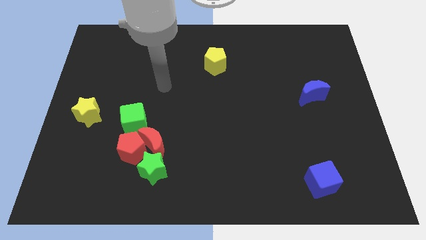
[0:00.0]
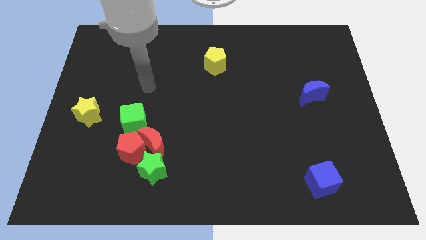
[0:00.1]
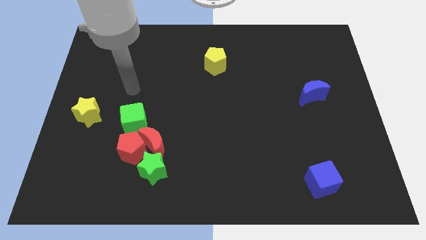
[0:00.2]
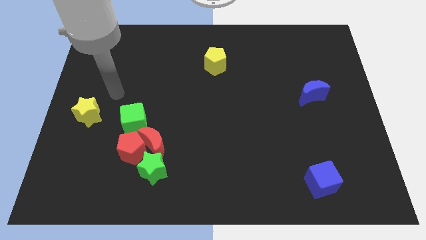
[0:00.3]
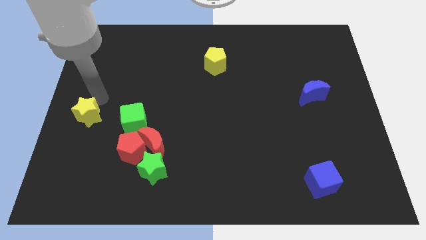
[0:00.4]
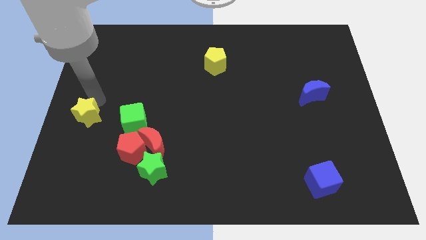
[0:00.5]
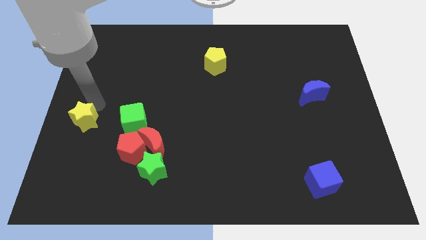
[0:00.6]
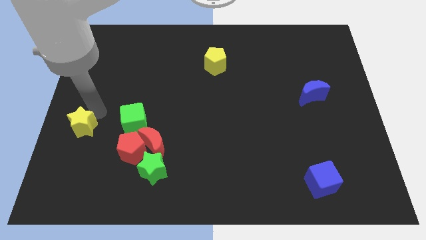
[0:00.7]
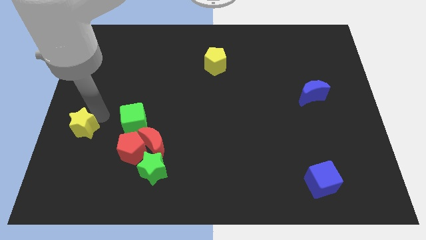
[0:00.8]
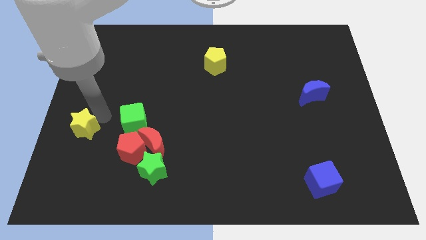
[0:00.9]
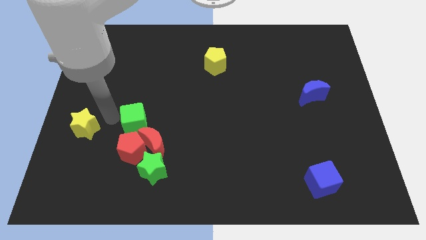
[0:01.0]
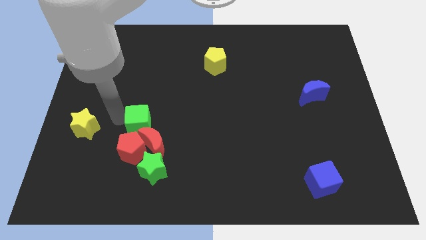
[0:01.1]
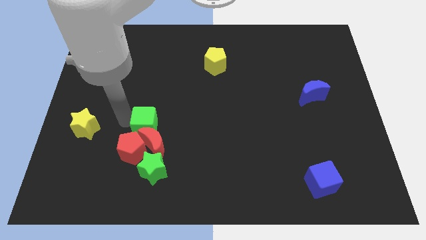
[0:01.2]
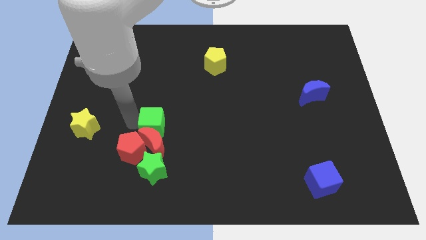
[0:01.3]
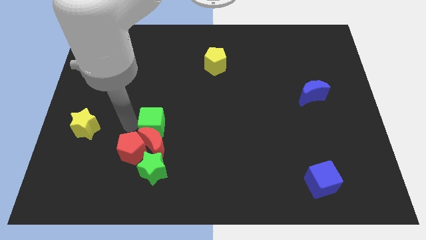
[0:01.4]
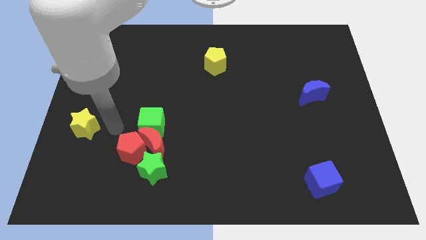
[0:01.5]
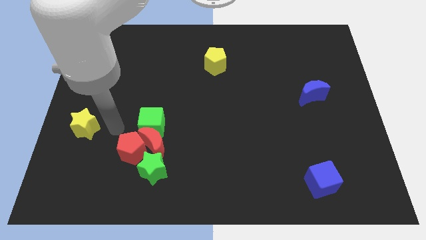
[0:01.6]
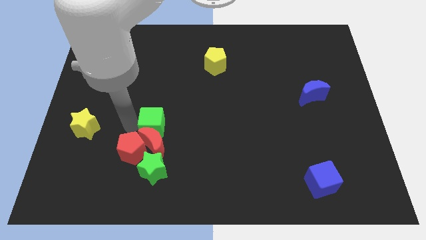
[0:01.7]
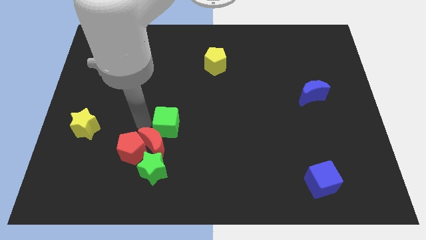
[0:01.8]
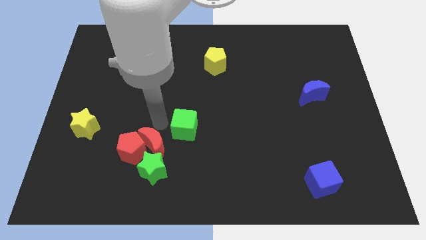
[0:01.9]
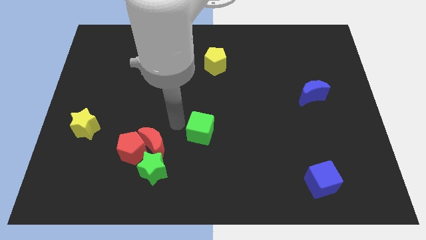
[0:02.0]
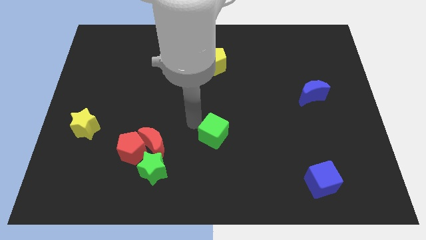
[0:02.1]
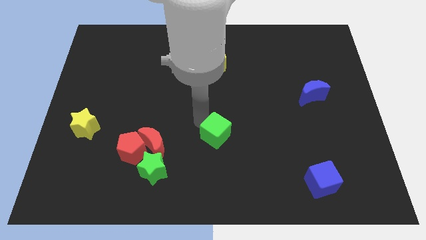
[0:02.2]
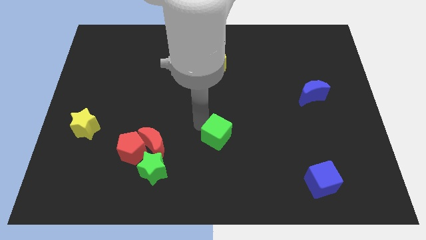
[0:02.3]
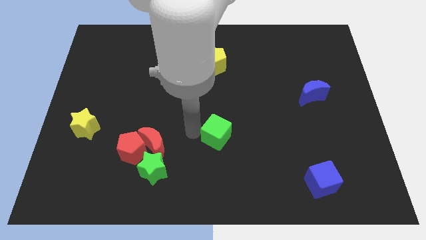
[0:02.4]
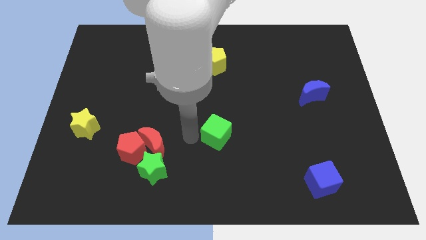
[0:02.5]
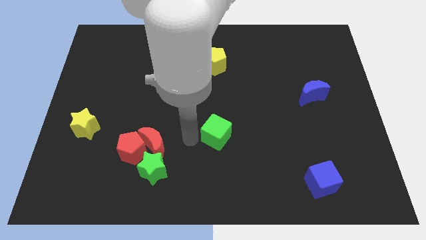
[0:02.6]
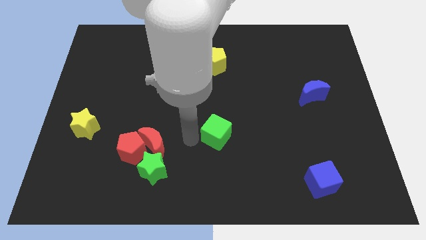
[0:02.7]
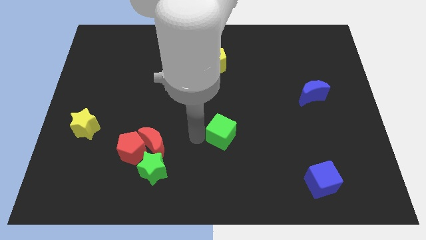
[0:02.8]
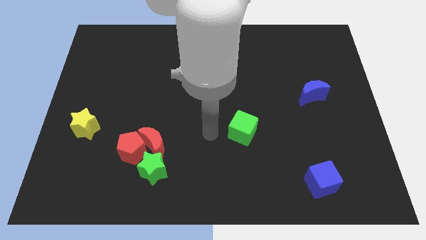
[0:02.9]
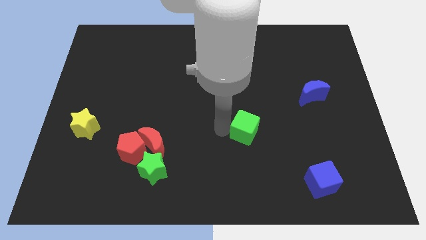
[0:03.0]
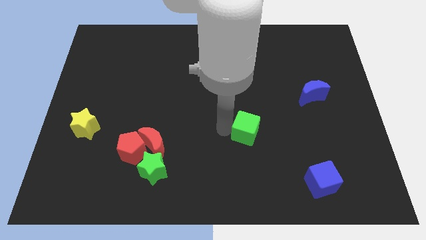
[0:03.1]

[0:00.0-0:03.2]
move the green cube towards the blue cube

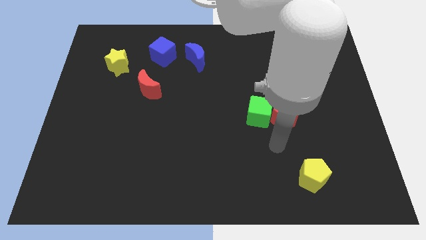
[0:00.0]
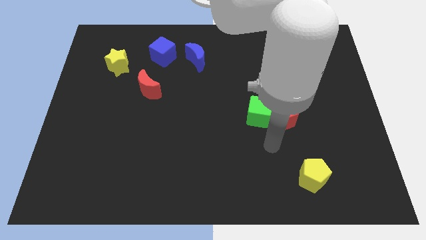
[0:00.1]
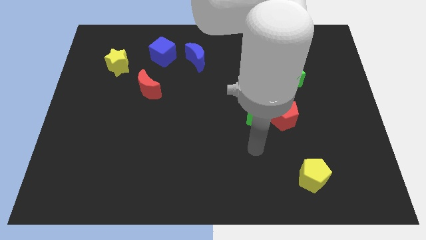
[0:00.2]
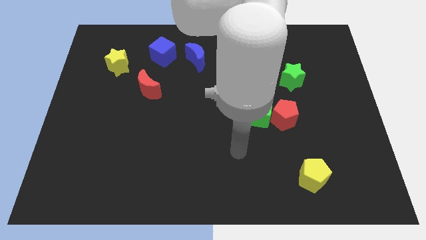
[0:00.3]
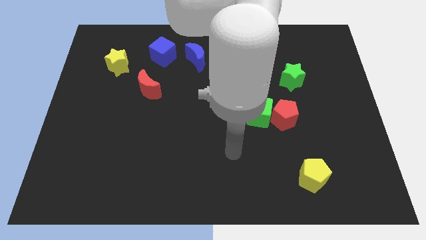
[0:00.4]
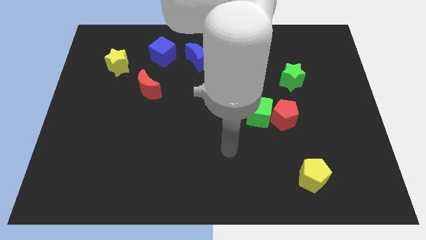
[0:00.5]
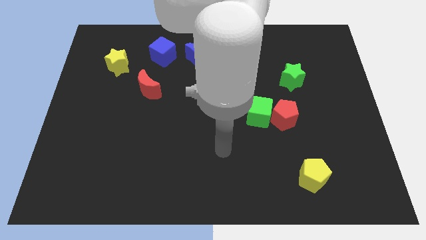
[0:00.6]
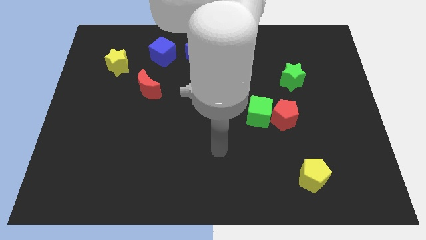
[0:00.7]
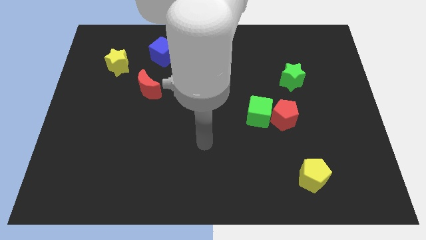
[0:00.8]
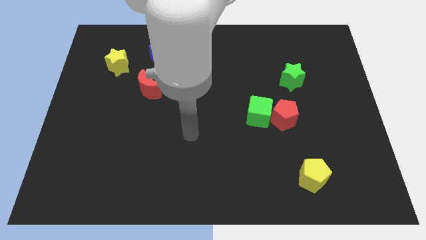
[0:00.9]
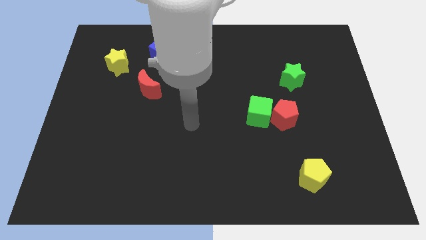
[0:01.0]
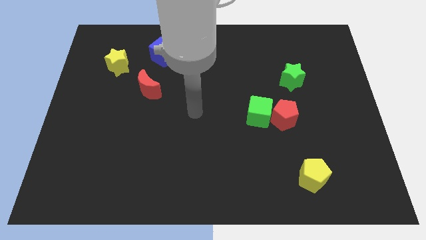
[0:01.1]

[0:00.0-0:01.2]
point your arm at the center of the board

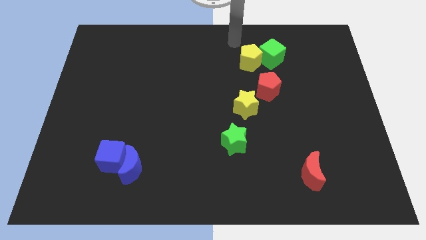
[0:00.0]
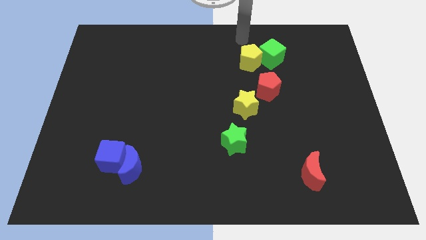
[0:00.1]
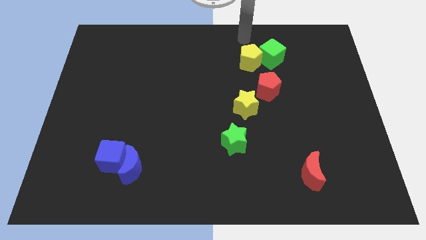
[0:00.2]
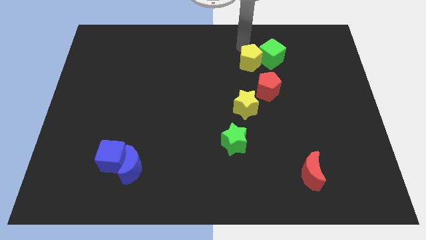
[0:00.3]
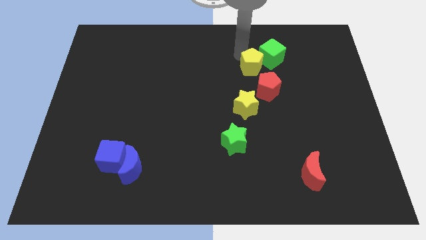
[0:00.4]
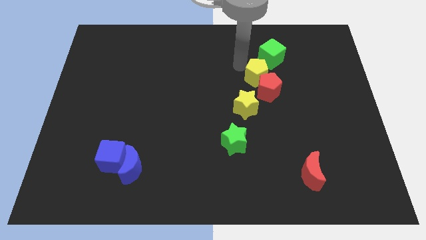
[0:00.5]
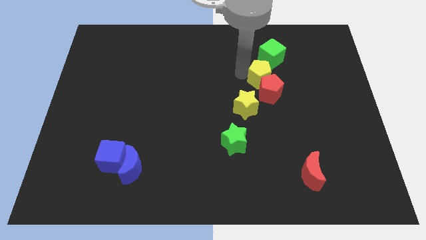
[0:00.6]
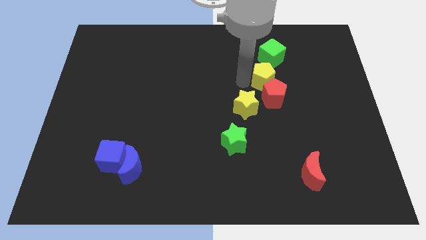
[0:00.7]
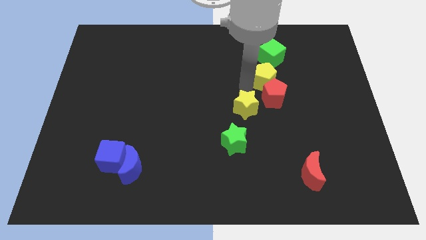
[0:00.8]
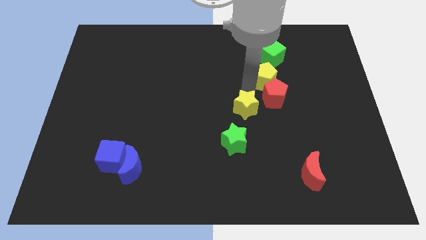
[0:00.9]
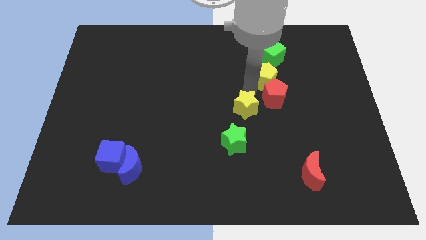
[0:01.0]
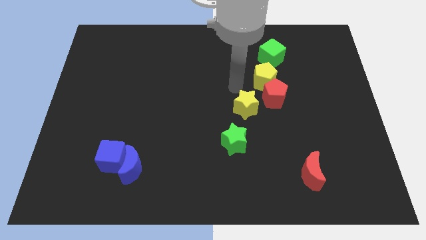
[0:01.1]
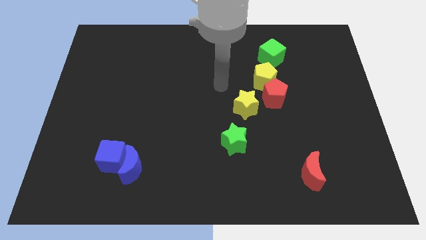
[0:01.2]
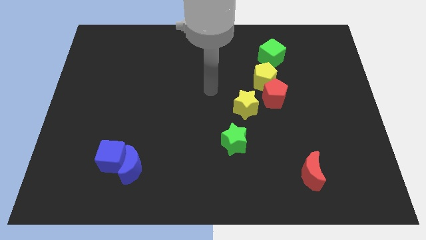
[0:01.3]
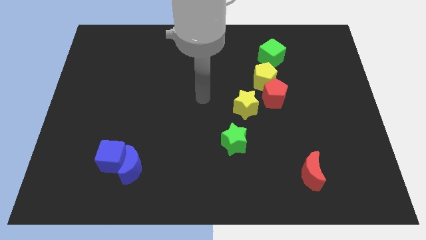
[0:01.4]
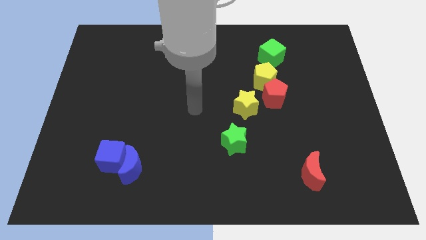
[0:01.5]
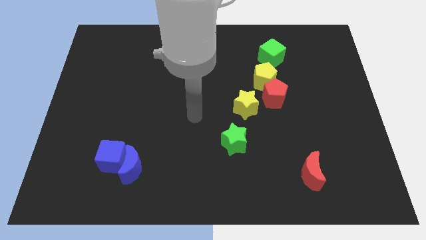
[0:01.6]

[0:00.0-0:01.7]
push the yellow pentagon to the top left side of the red pentagon

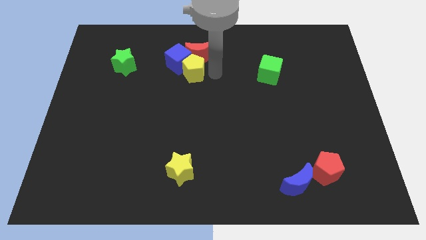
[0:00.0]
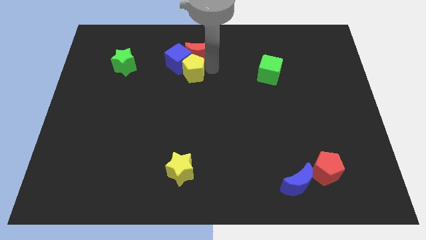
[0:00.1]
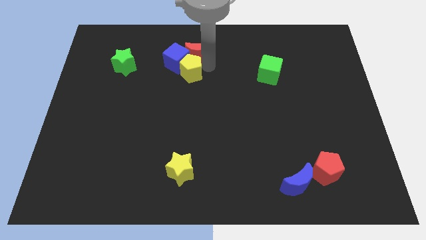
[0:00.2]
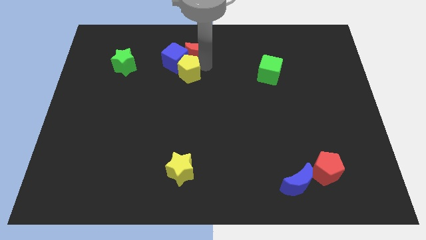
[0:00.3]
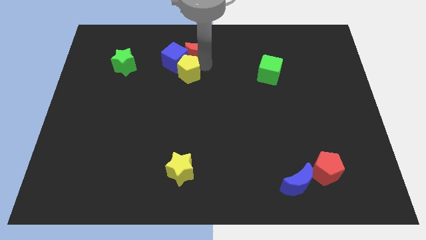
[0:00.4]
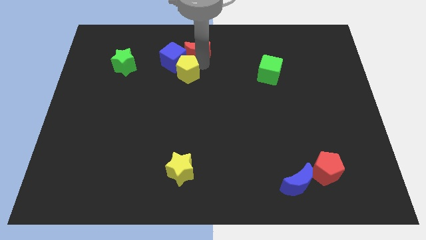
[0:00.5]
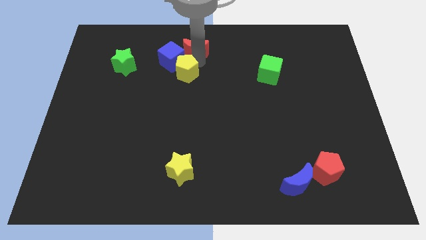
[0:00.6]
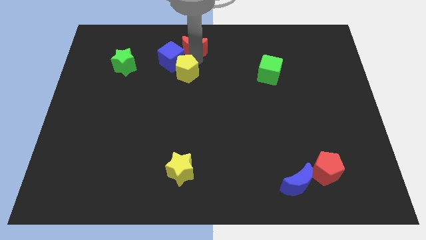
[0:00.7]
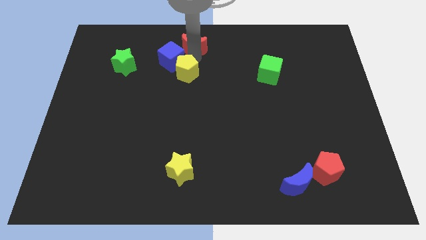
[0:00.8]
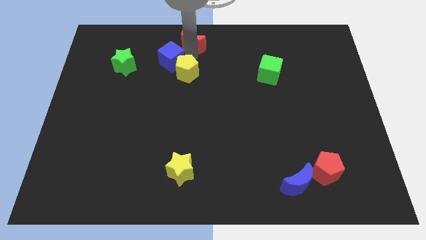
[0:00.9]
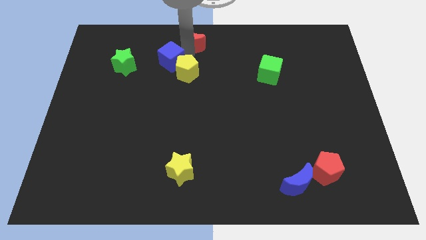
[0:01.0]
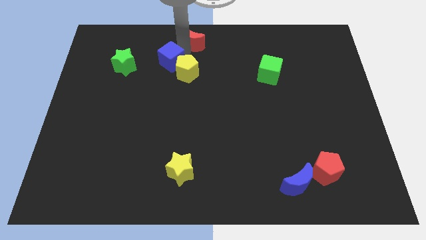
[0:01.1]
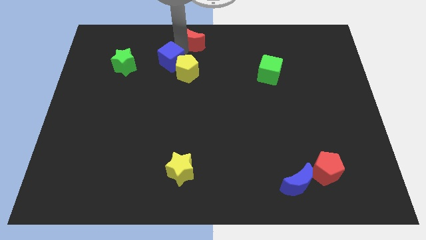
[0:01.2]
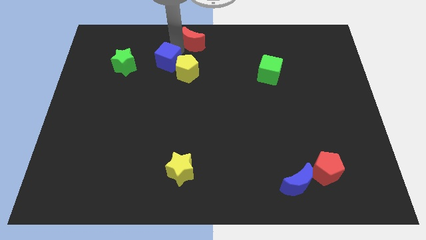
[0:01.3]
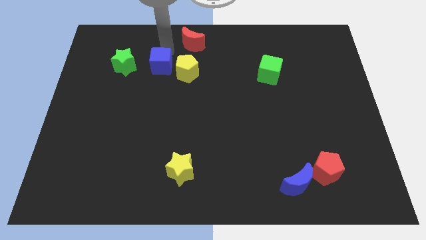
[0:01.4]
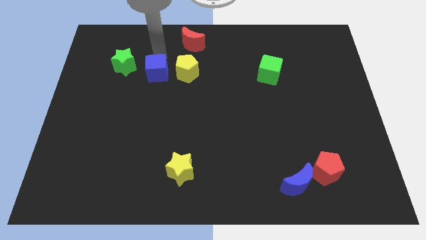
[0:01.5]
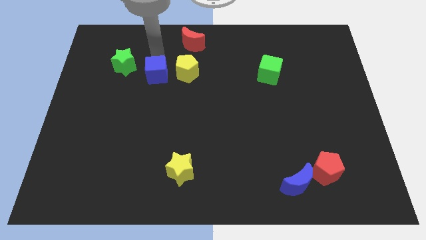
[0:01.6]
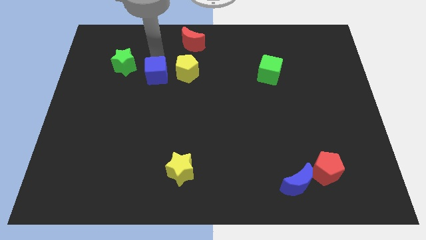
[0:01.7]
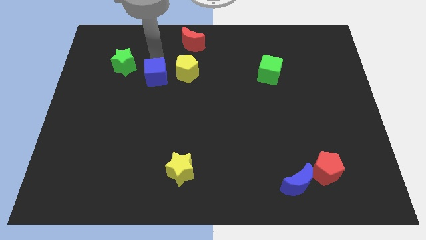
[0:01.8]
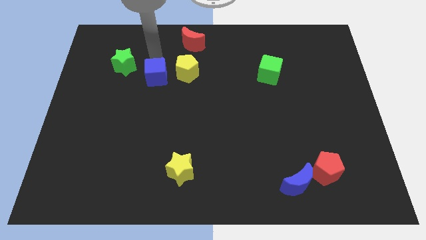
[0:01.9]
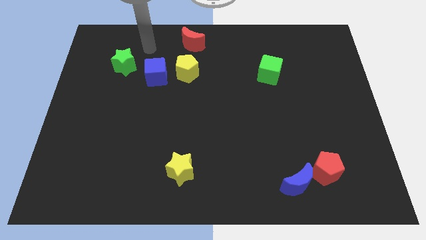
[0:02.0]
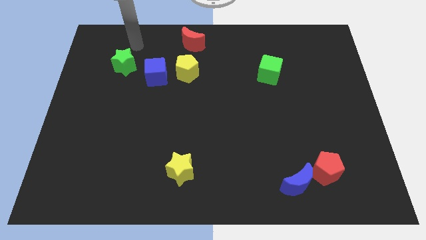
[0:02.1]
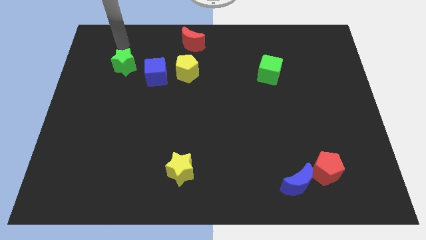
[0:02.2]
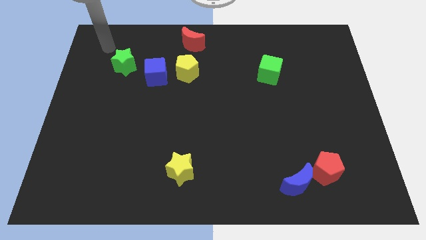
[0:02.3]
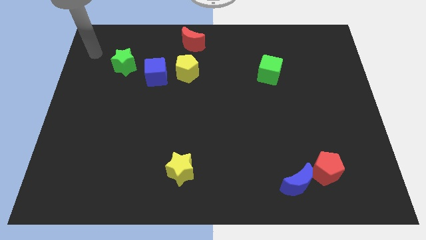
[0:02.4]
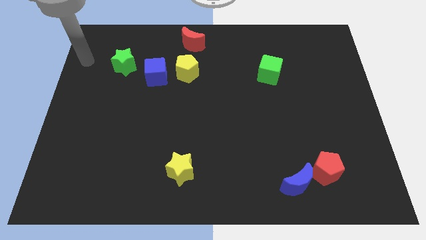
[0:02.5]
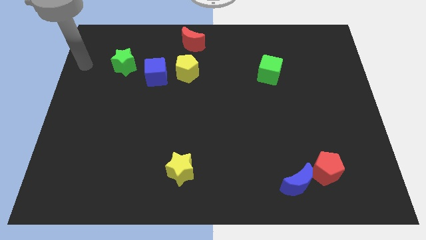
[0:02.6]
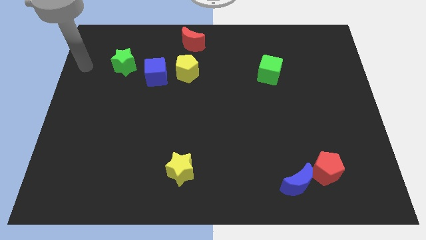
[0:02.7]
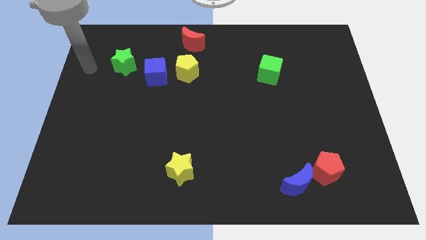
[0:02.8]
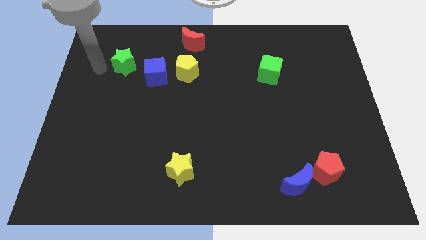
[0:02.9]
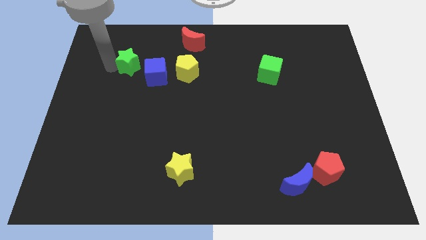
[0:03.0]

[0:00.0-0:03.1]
separate the red crescent and the blue cube from the yellow pentagon
